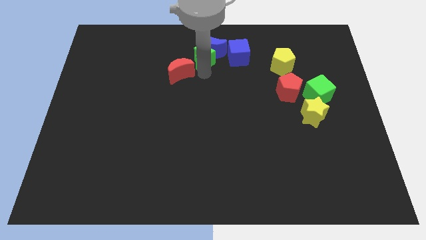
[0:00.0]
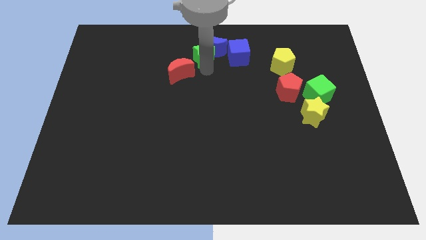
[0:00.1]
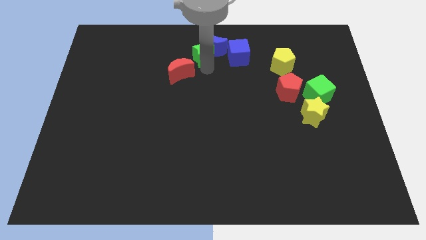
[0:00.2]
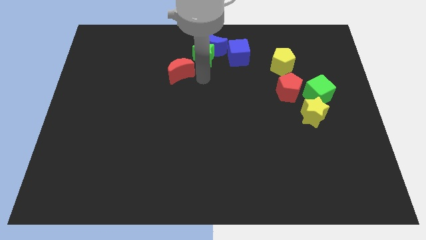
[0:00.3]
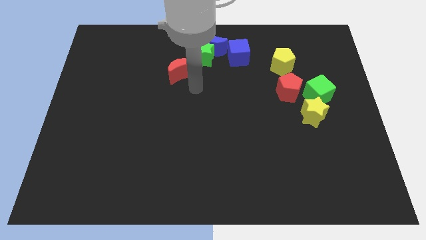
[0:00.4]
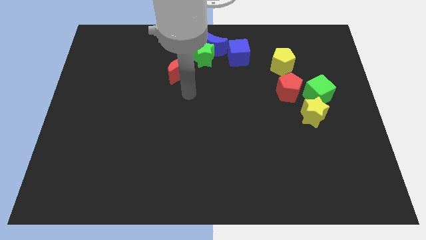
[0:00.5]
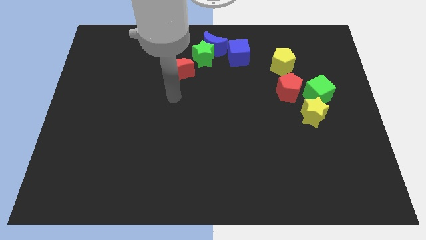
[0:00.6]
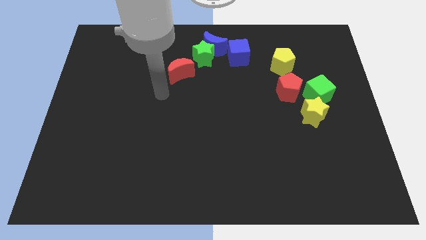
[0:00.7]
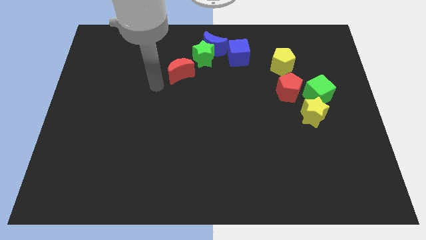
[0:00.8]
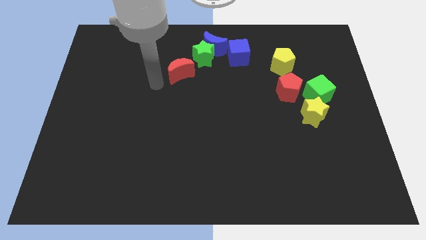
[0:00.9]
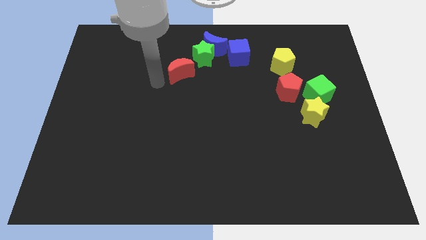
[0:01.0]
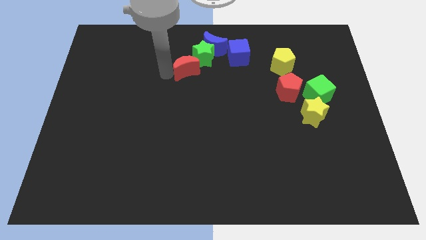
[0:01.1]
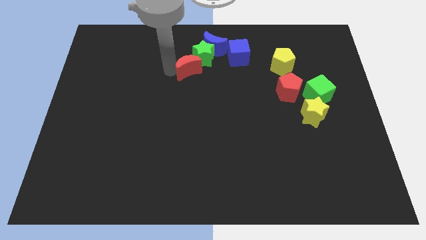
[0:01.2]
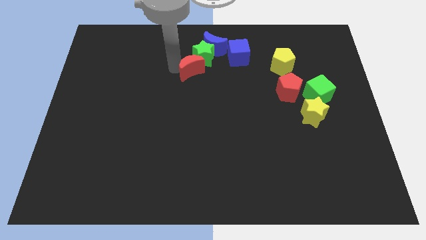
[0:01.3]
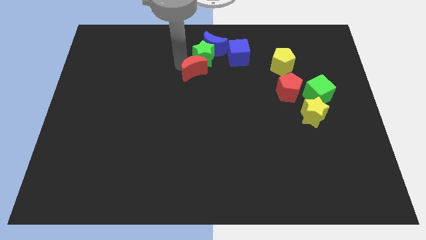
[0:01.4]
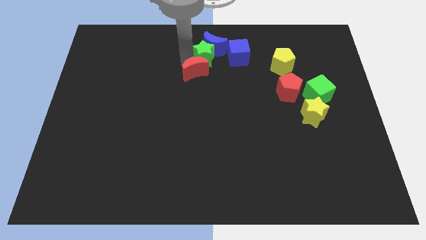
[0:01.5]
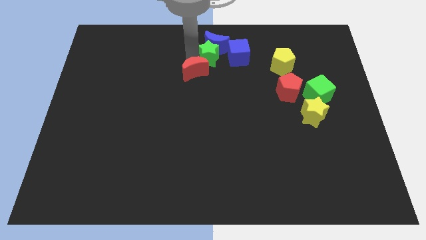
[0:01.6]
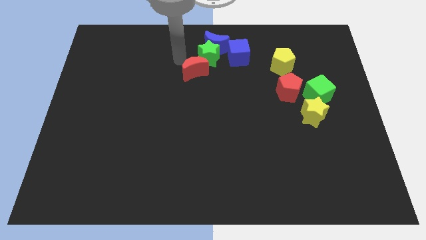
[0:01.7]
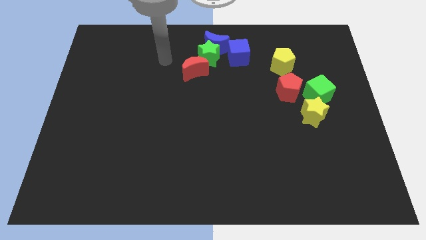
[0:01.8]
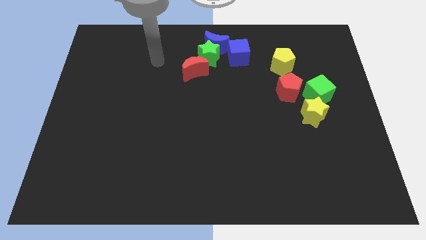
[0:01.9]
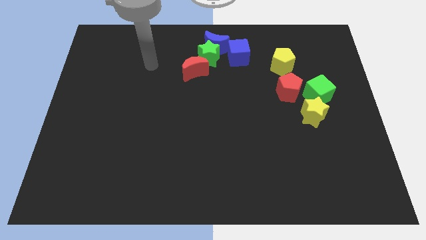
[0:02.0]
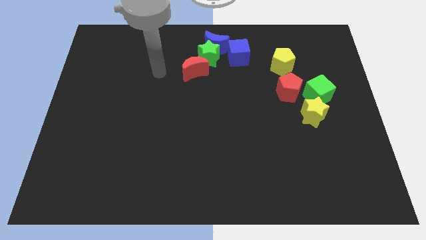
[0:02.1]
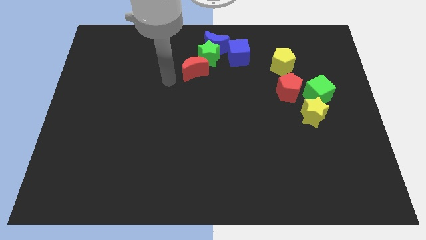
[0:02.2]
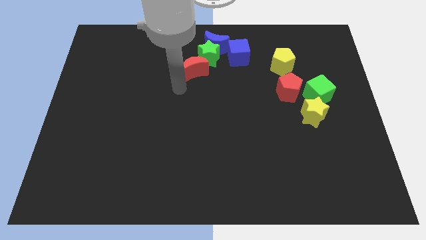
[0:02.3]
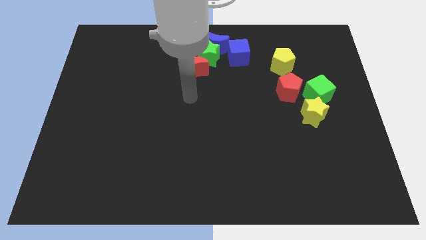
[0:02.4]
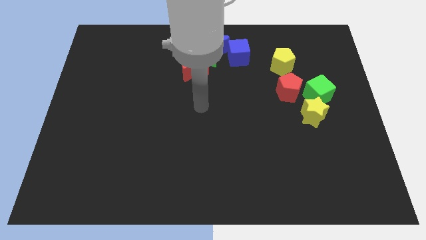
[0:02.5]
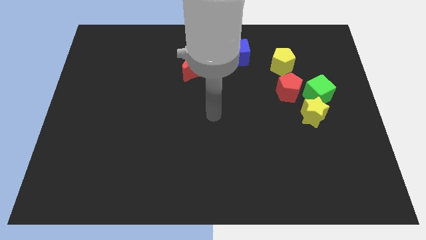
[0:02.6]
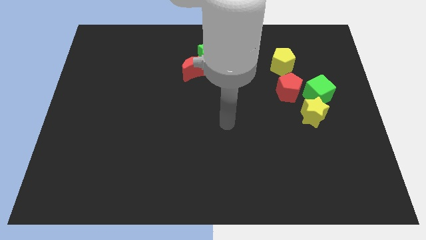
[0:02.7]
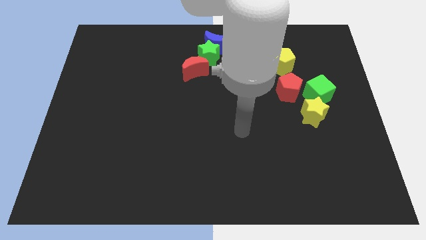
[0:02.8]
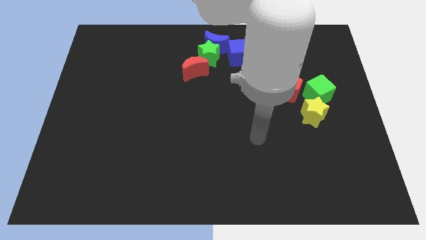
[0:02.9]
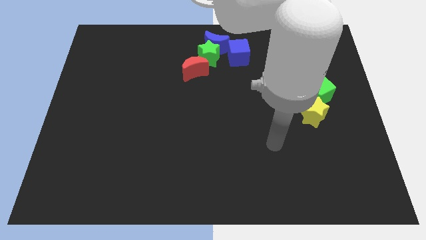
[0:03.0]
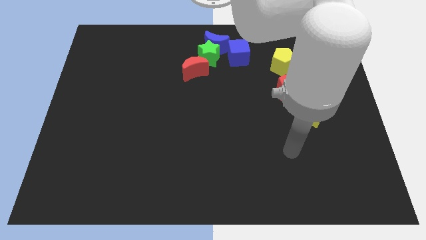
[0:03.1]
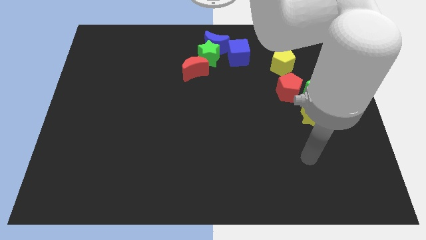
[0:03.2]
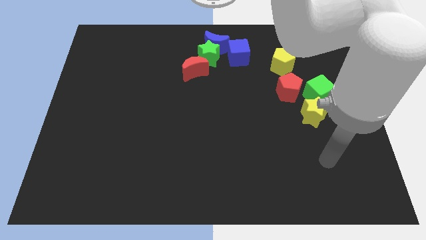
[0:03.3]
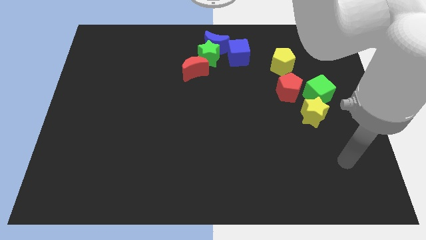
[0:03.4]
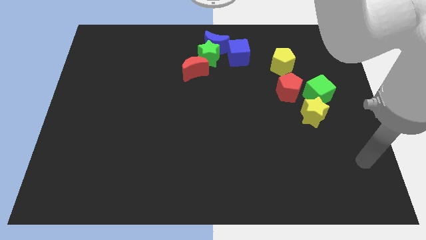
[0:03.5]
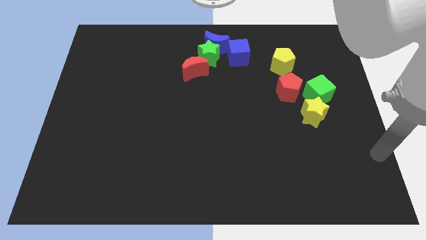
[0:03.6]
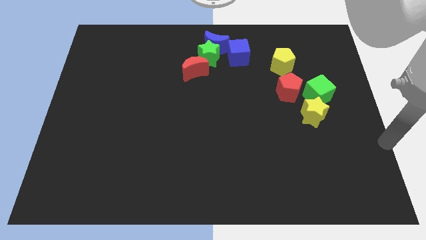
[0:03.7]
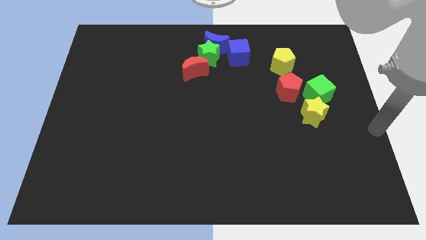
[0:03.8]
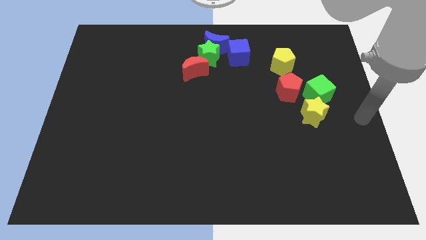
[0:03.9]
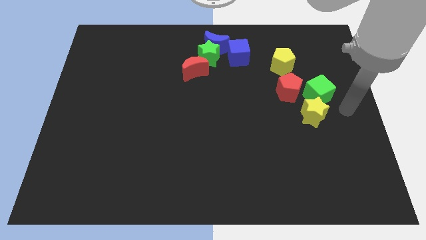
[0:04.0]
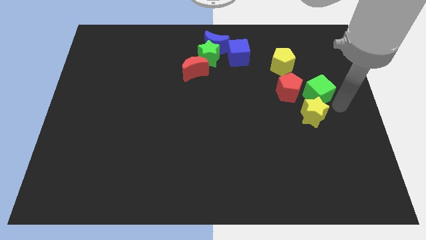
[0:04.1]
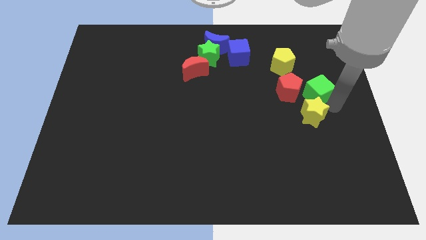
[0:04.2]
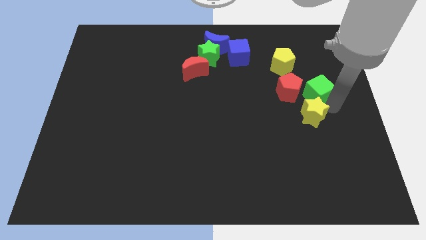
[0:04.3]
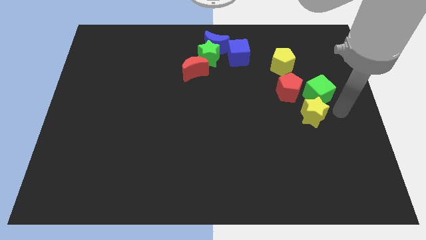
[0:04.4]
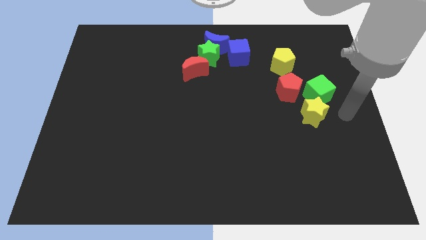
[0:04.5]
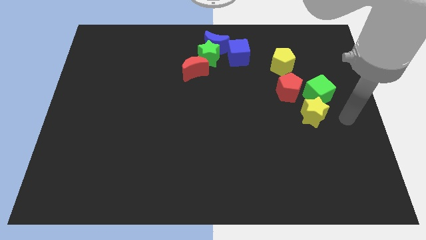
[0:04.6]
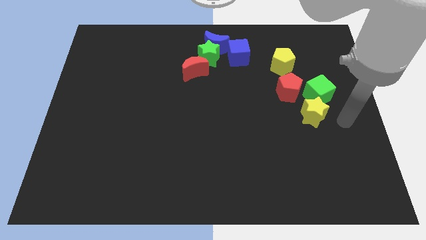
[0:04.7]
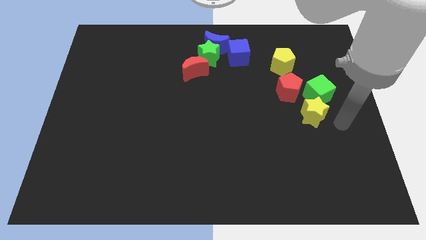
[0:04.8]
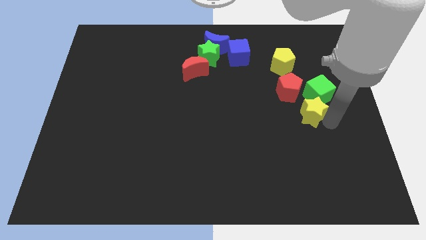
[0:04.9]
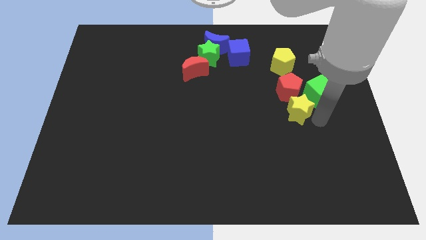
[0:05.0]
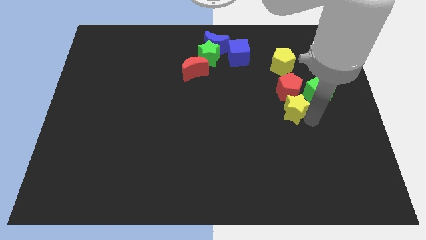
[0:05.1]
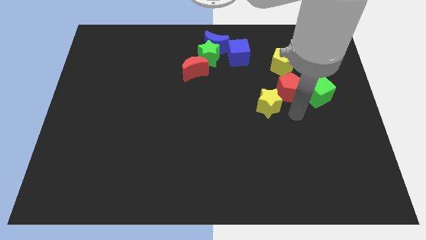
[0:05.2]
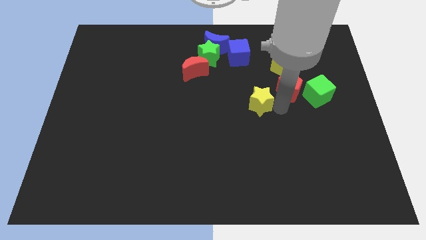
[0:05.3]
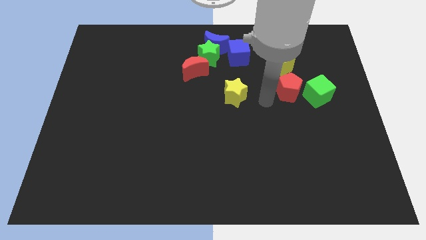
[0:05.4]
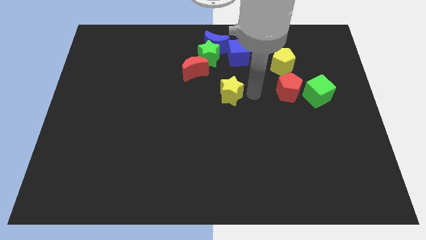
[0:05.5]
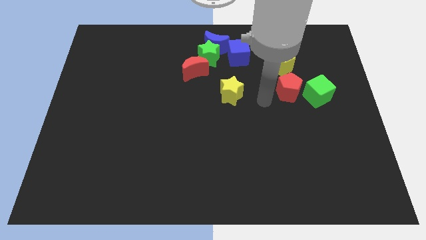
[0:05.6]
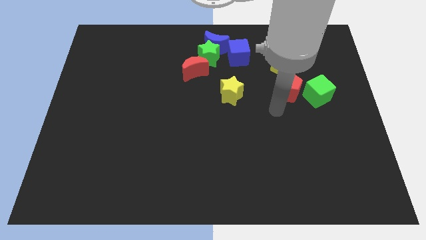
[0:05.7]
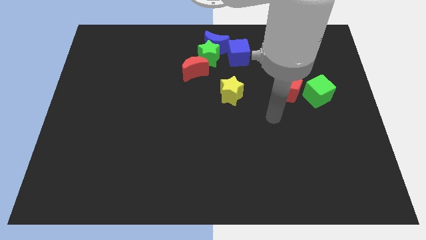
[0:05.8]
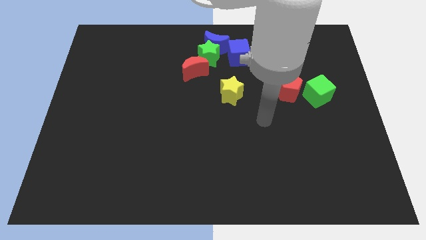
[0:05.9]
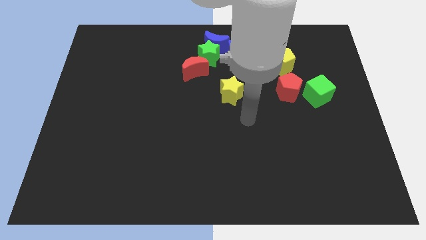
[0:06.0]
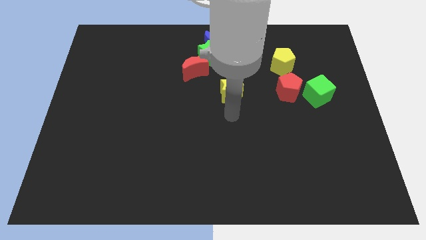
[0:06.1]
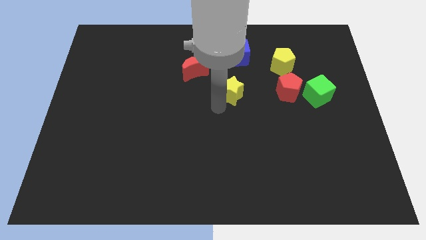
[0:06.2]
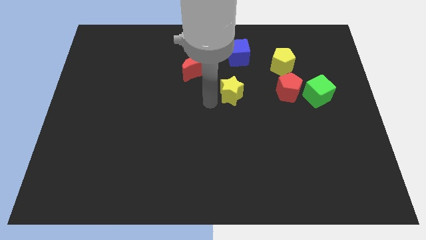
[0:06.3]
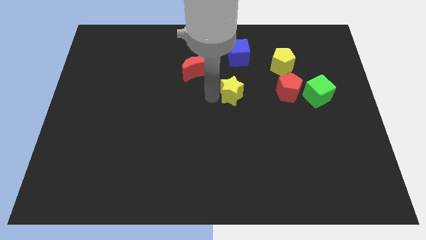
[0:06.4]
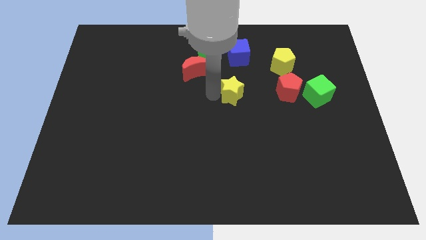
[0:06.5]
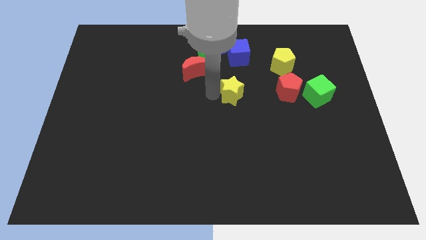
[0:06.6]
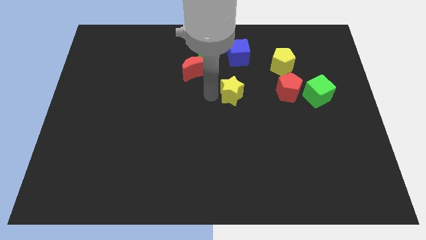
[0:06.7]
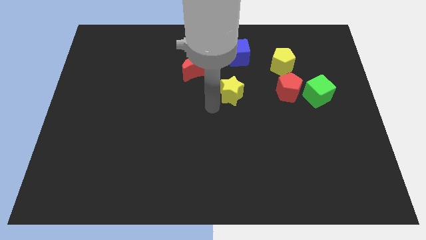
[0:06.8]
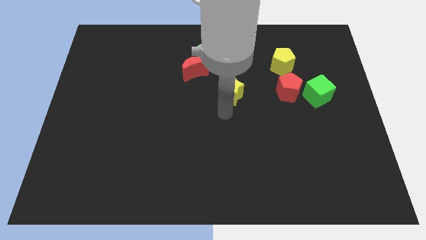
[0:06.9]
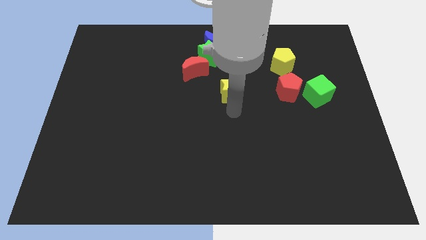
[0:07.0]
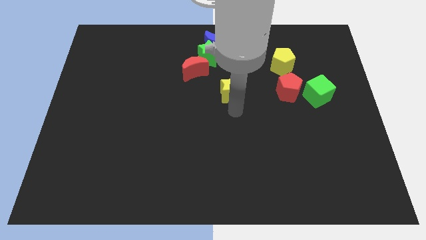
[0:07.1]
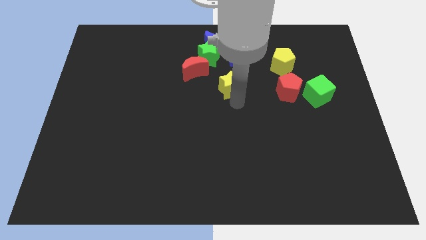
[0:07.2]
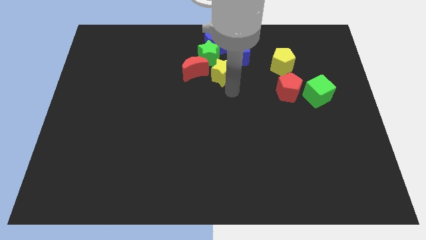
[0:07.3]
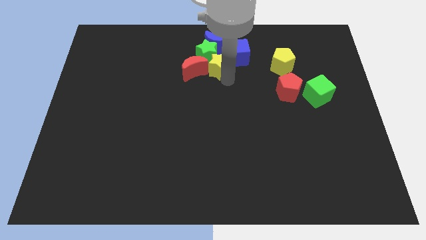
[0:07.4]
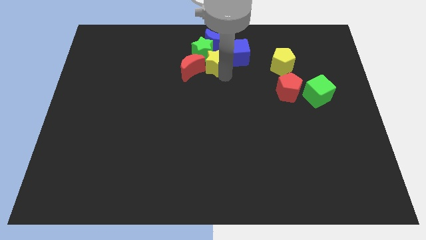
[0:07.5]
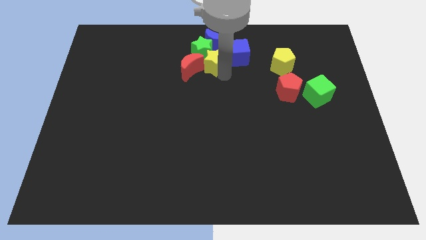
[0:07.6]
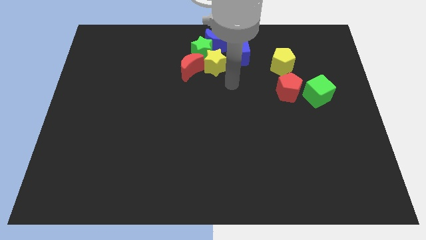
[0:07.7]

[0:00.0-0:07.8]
group up the red crescent green star yellow star blue crescent and blue cube at the top center of the board

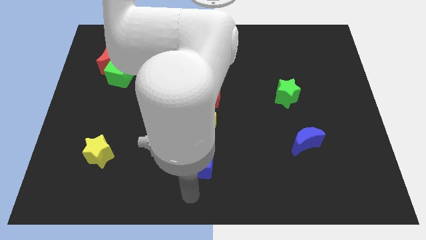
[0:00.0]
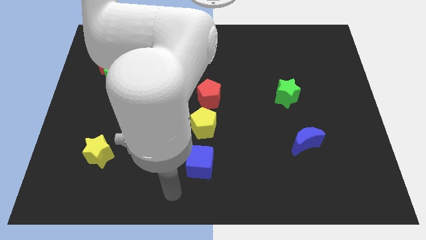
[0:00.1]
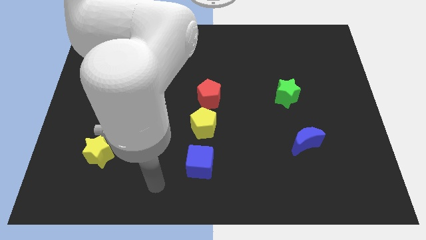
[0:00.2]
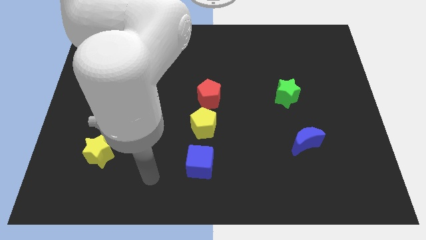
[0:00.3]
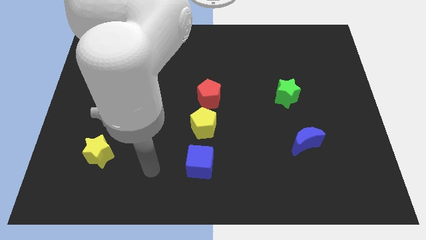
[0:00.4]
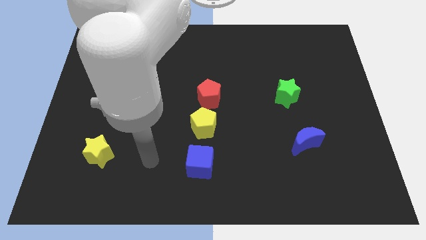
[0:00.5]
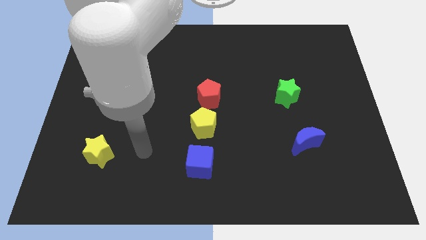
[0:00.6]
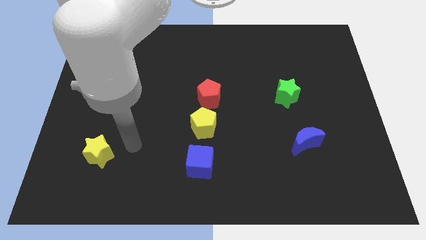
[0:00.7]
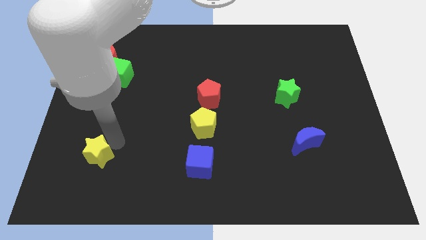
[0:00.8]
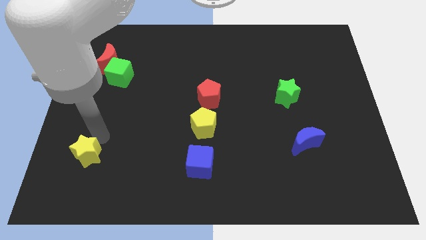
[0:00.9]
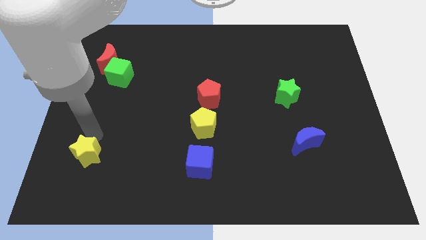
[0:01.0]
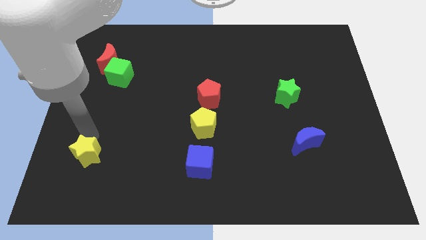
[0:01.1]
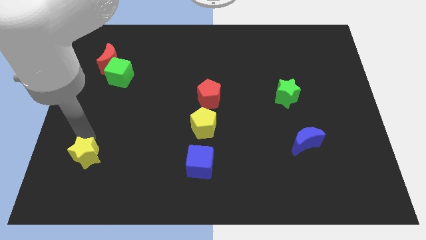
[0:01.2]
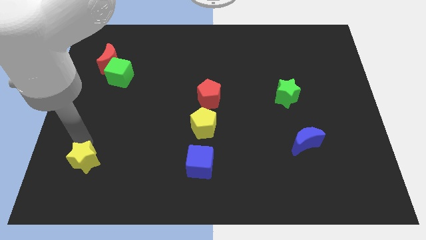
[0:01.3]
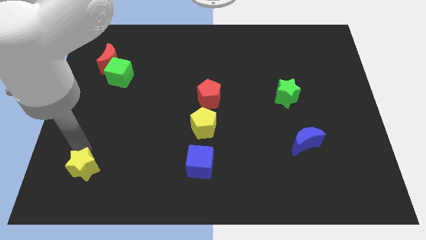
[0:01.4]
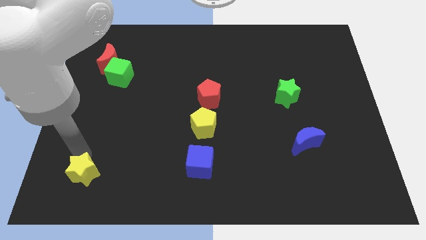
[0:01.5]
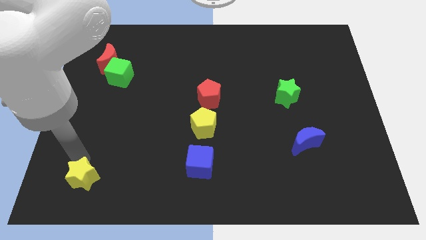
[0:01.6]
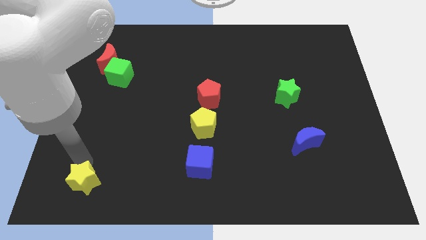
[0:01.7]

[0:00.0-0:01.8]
move the arm into the yellow star
